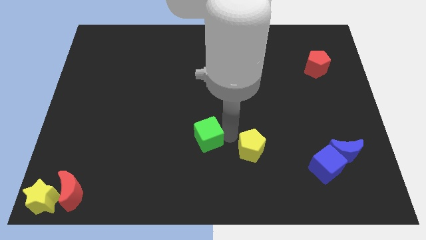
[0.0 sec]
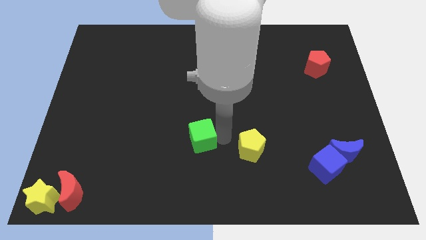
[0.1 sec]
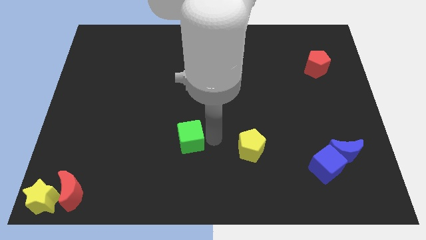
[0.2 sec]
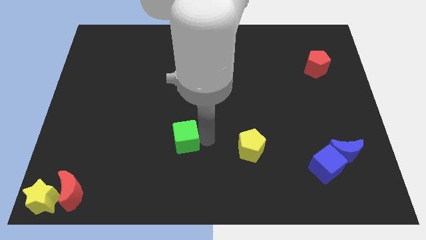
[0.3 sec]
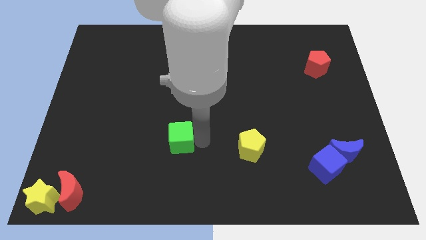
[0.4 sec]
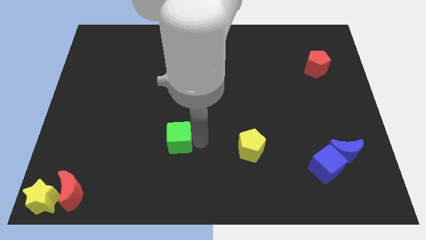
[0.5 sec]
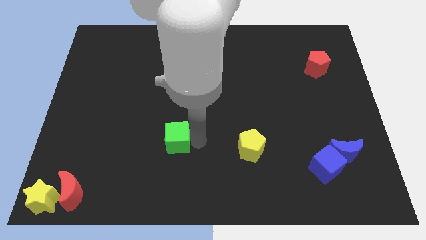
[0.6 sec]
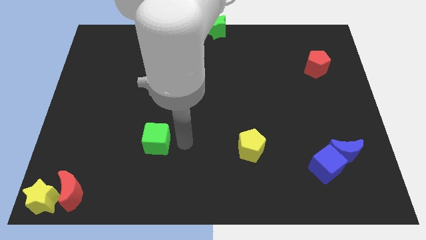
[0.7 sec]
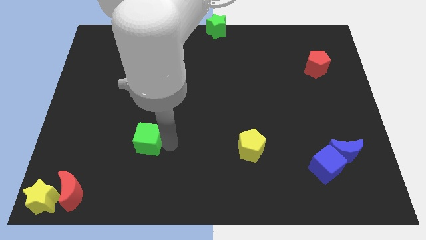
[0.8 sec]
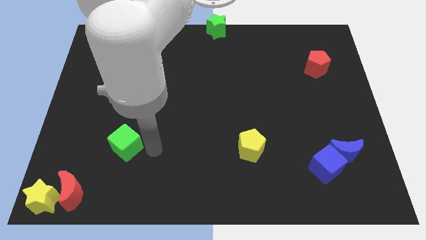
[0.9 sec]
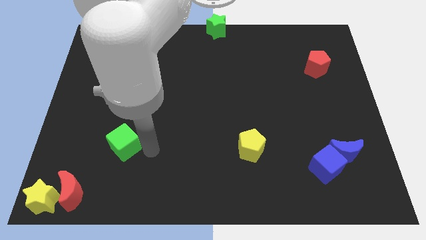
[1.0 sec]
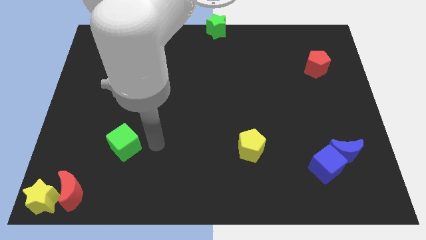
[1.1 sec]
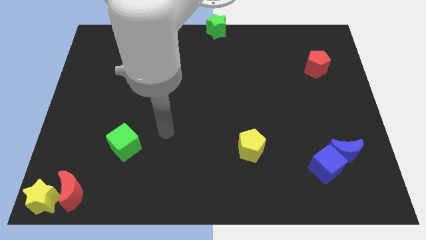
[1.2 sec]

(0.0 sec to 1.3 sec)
put the green cube at the top right of the red crescent

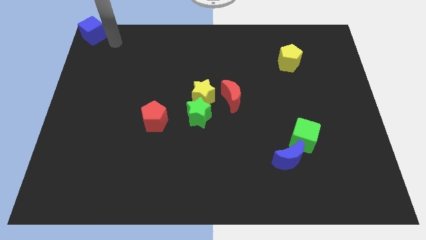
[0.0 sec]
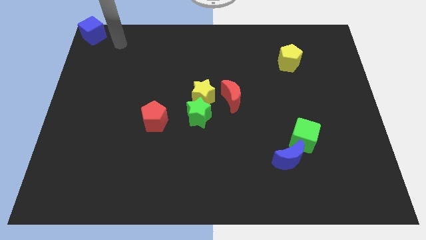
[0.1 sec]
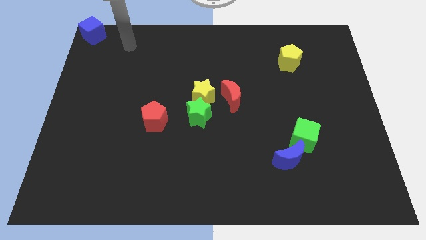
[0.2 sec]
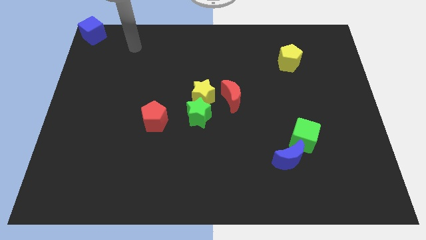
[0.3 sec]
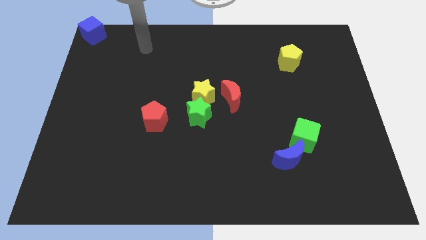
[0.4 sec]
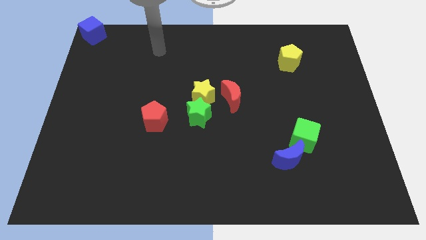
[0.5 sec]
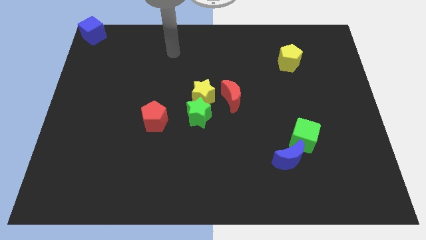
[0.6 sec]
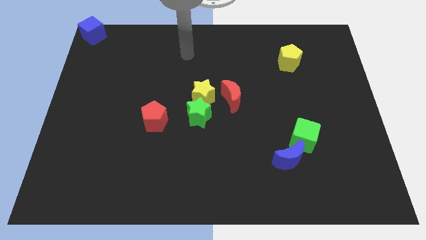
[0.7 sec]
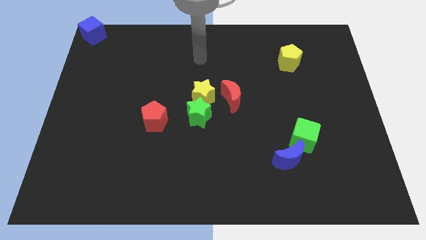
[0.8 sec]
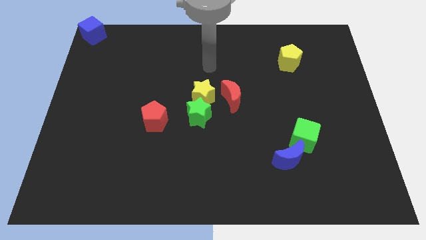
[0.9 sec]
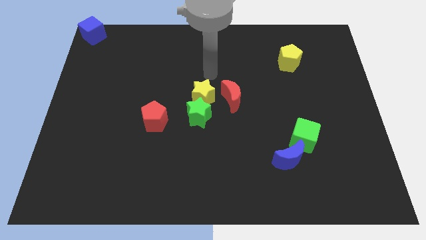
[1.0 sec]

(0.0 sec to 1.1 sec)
move arm away from blue cube

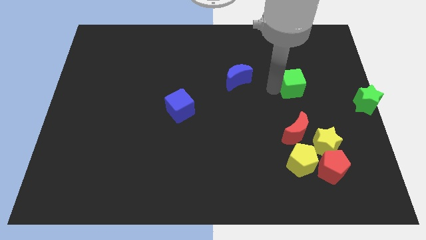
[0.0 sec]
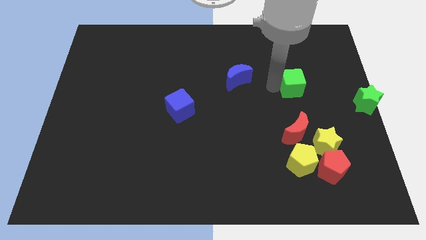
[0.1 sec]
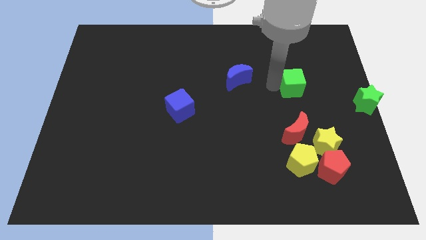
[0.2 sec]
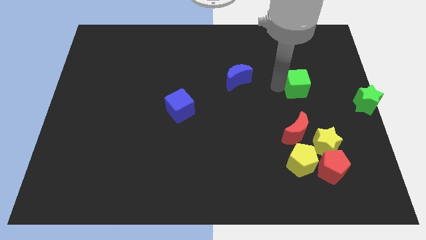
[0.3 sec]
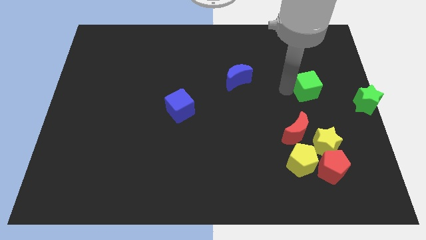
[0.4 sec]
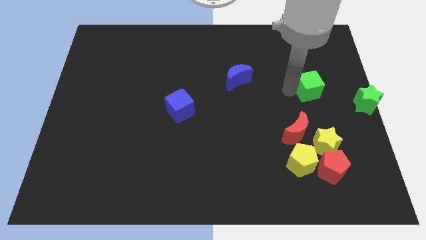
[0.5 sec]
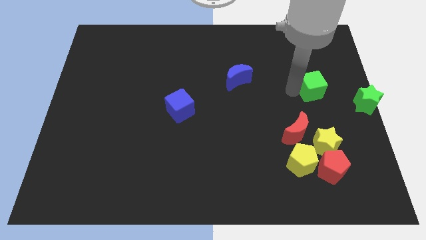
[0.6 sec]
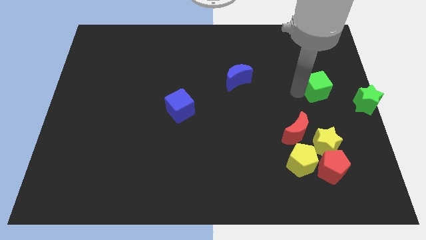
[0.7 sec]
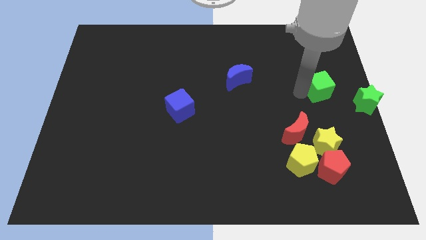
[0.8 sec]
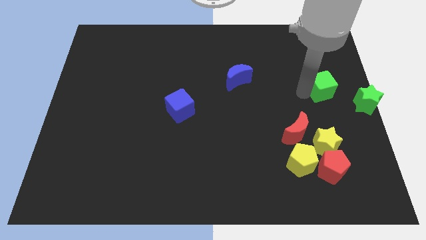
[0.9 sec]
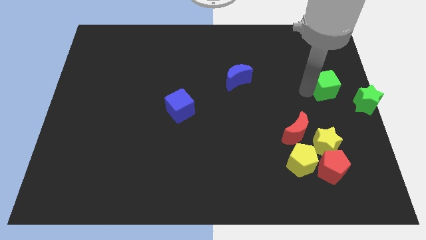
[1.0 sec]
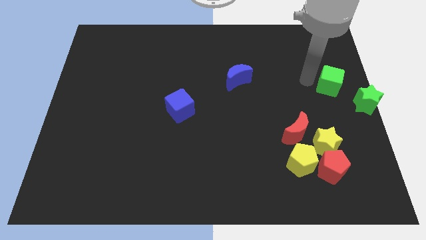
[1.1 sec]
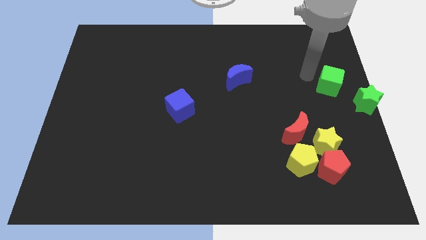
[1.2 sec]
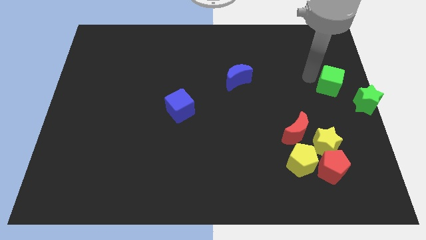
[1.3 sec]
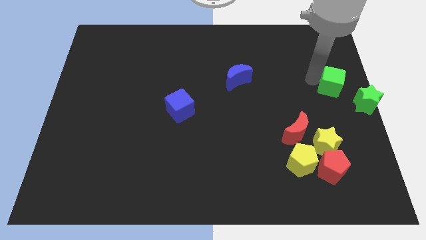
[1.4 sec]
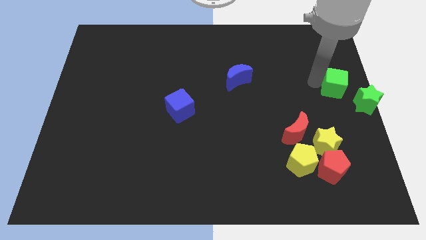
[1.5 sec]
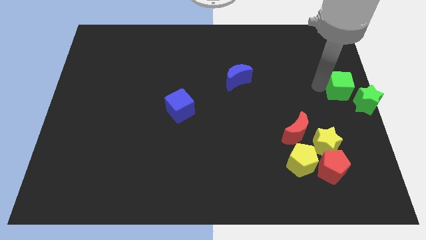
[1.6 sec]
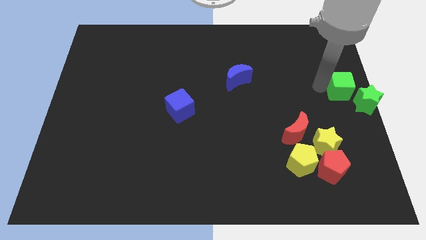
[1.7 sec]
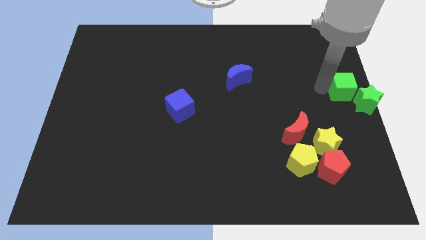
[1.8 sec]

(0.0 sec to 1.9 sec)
push the green cube into the green star towards the right corner

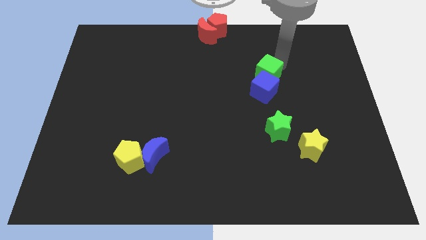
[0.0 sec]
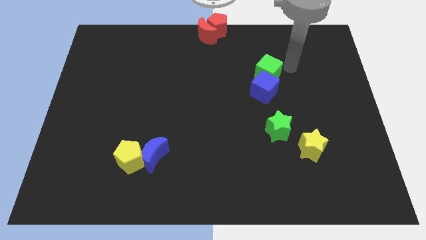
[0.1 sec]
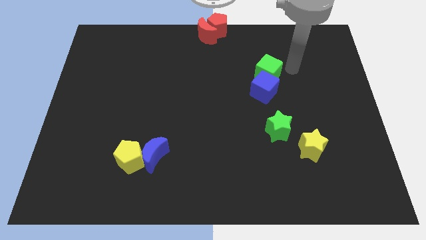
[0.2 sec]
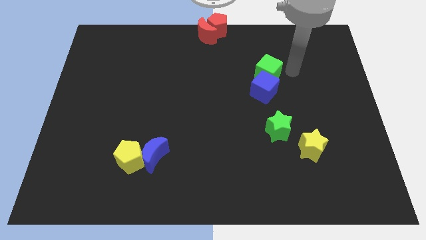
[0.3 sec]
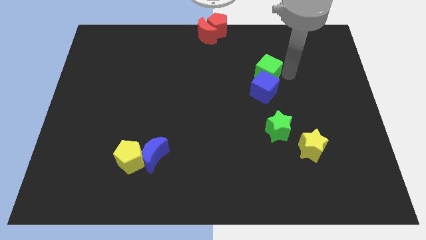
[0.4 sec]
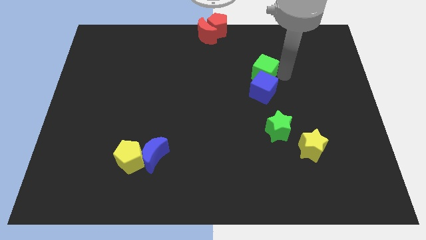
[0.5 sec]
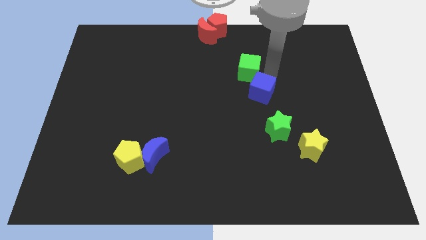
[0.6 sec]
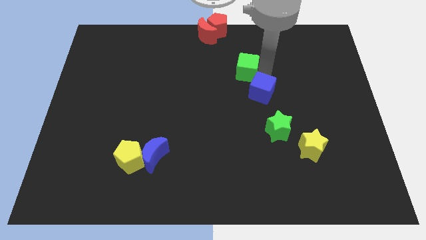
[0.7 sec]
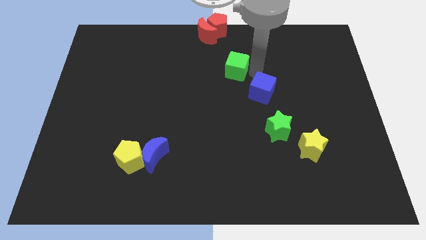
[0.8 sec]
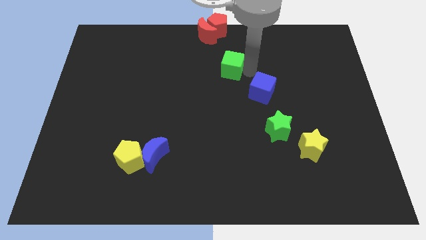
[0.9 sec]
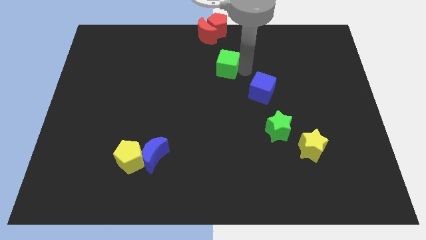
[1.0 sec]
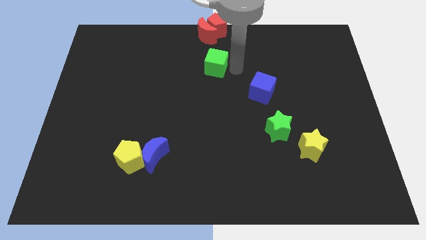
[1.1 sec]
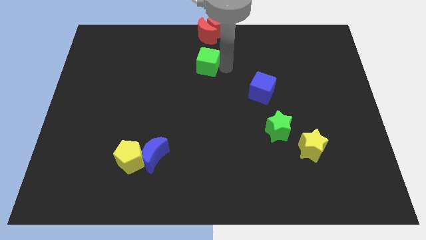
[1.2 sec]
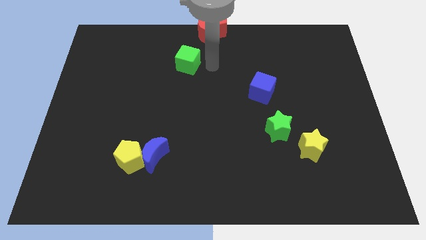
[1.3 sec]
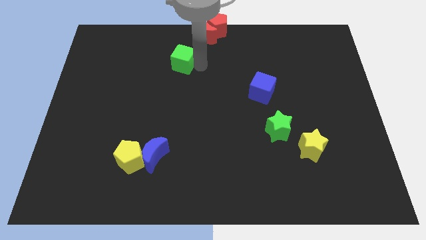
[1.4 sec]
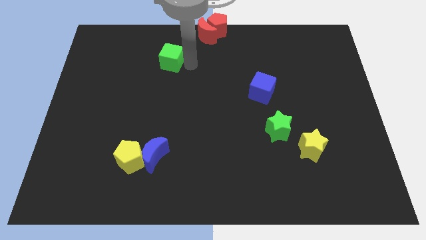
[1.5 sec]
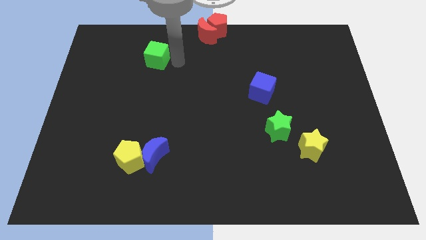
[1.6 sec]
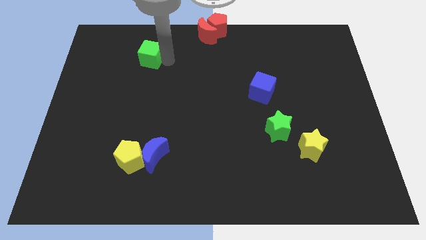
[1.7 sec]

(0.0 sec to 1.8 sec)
move the green cube to the left

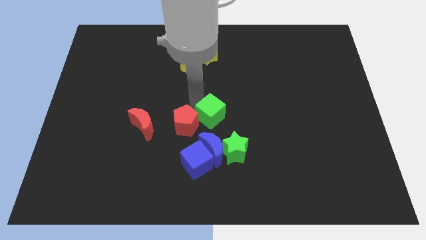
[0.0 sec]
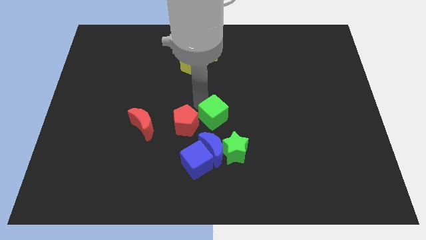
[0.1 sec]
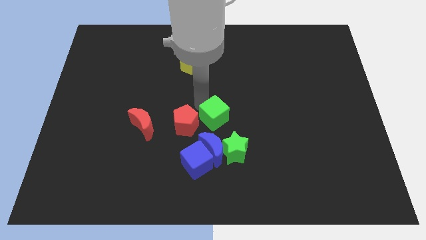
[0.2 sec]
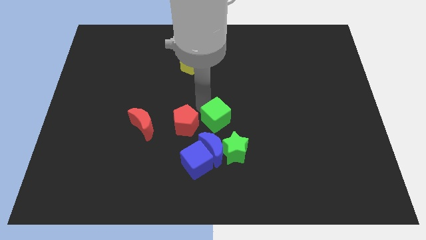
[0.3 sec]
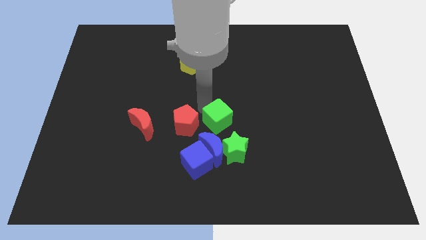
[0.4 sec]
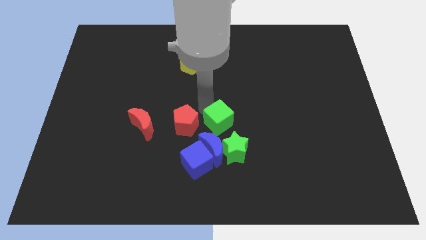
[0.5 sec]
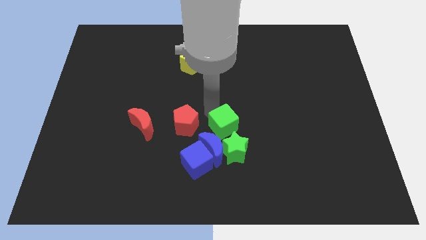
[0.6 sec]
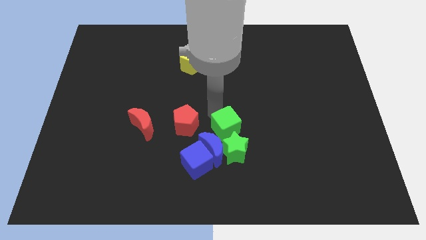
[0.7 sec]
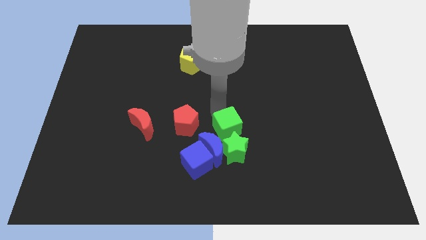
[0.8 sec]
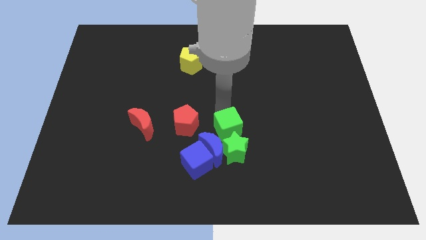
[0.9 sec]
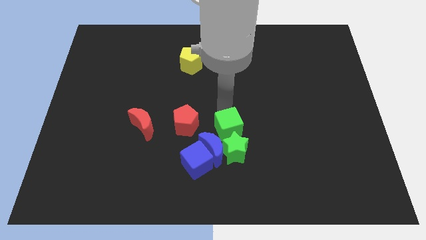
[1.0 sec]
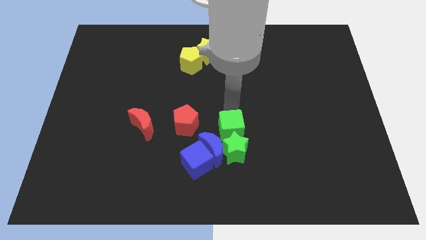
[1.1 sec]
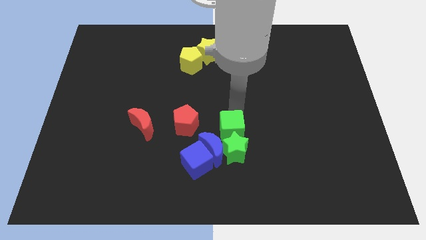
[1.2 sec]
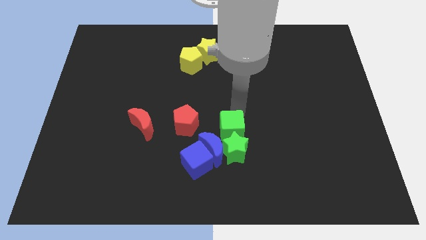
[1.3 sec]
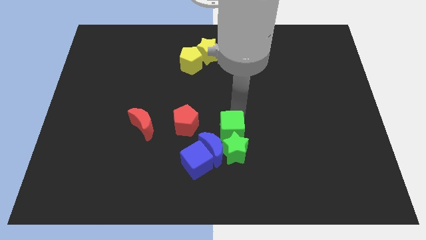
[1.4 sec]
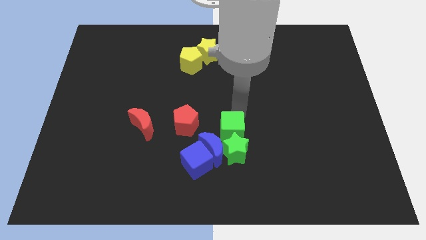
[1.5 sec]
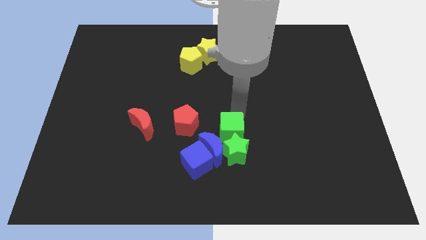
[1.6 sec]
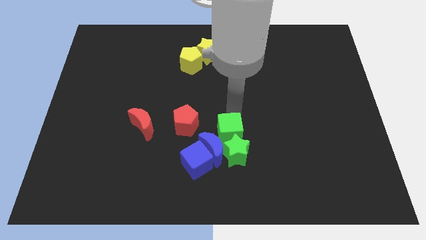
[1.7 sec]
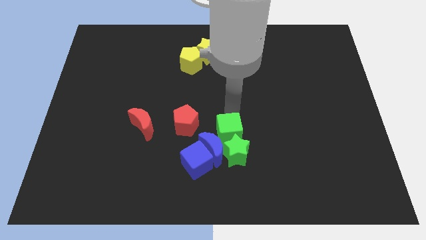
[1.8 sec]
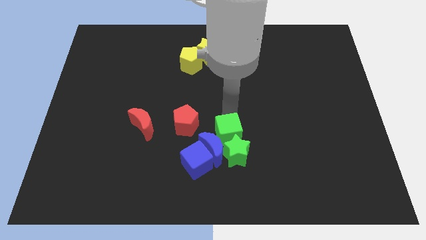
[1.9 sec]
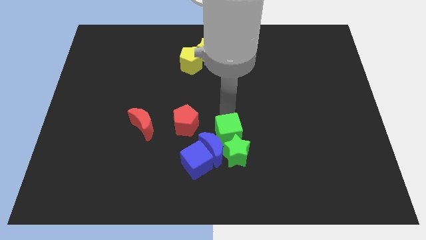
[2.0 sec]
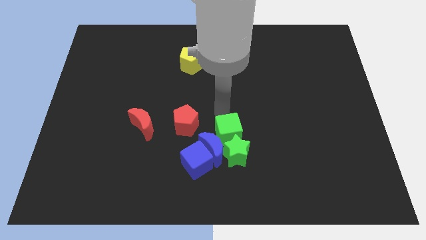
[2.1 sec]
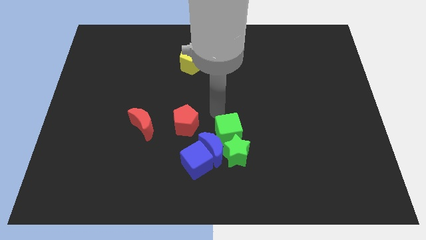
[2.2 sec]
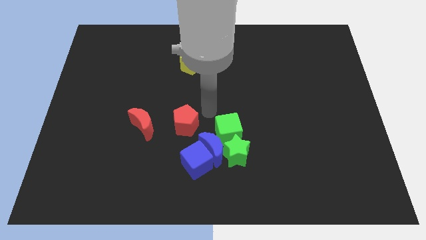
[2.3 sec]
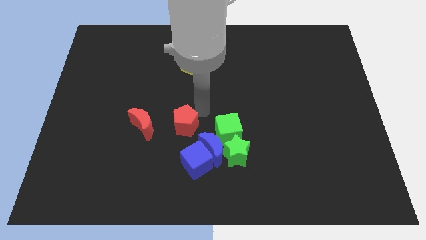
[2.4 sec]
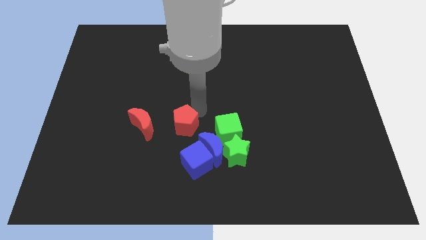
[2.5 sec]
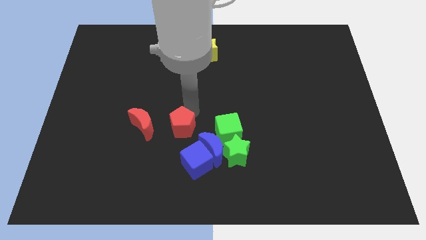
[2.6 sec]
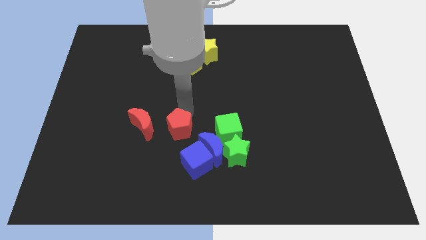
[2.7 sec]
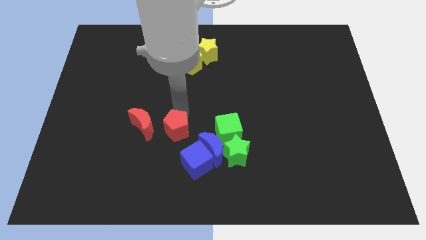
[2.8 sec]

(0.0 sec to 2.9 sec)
move the green cube into the green star
